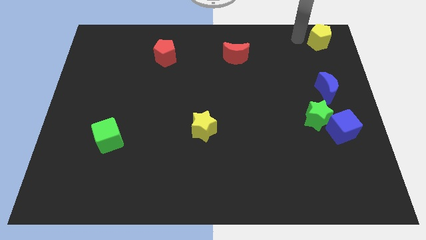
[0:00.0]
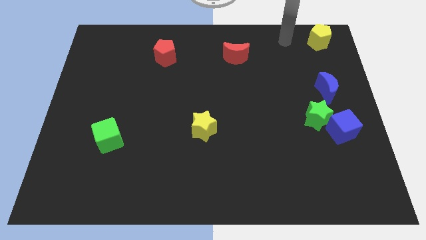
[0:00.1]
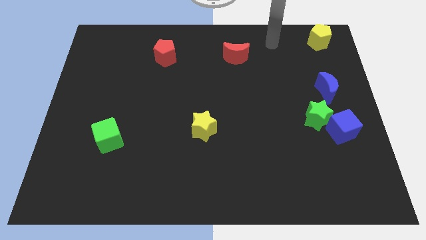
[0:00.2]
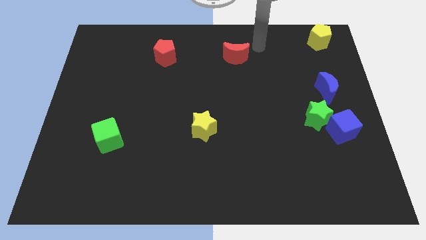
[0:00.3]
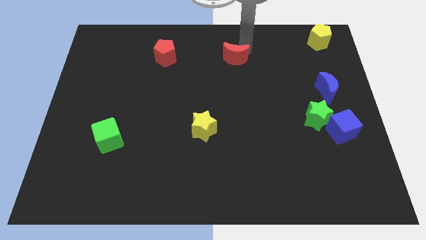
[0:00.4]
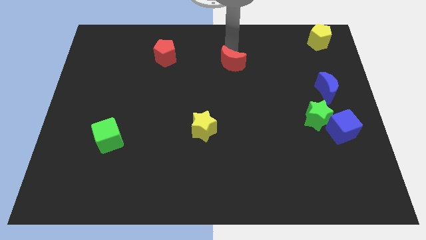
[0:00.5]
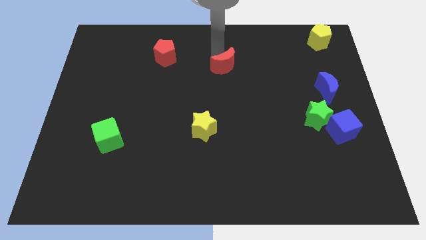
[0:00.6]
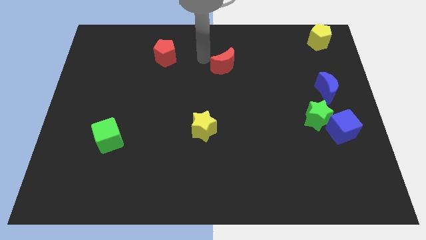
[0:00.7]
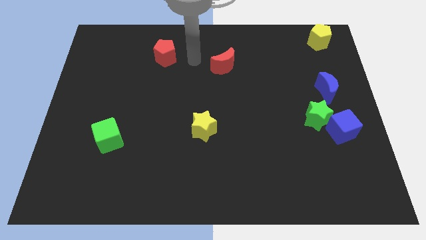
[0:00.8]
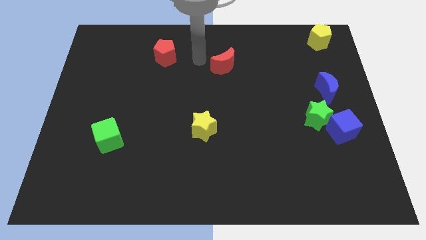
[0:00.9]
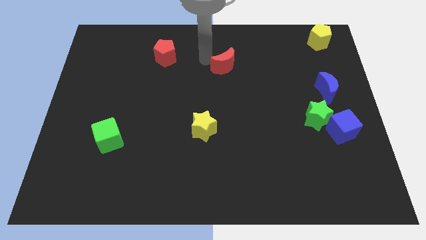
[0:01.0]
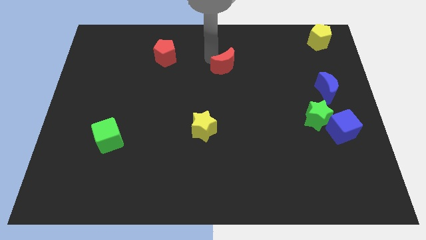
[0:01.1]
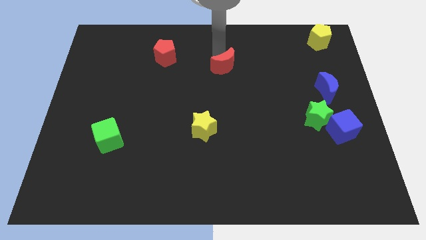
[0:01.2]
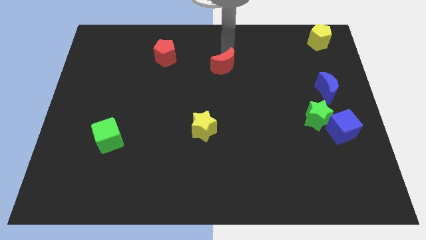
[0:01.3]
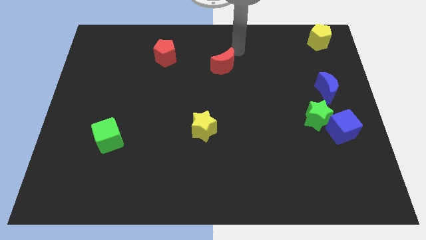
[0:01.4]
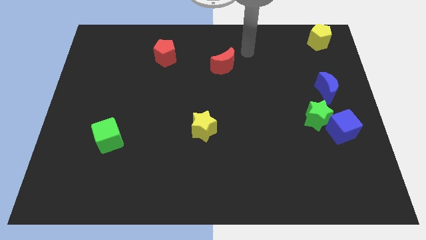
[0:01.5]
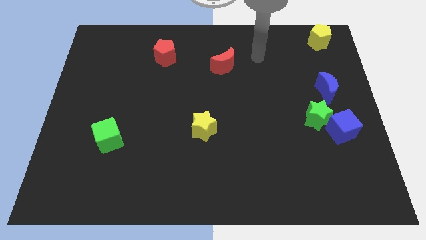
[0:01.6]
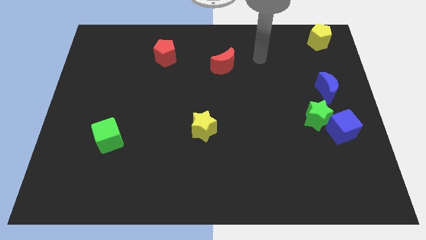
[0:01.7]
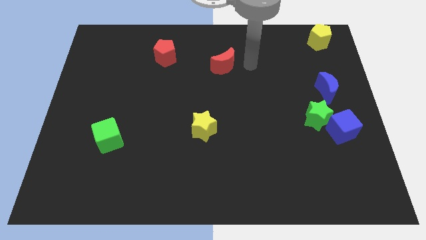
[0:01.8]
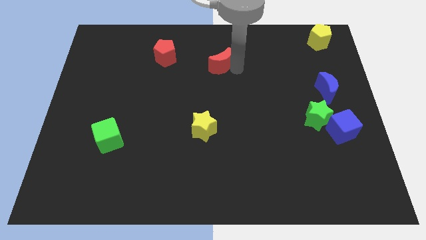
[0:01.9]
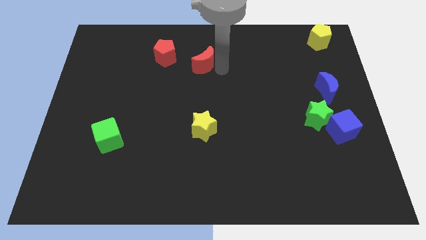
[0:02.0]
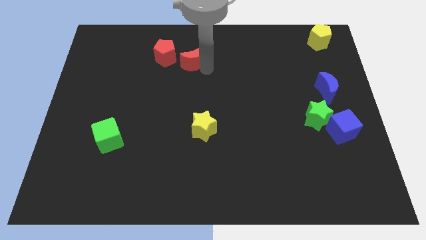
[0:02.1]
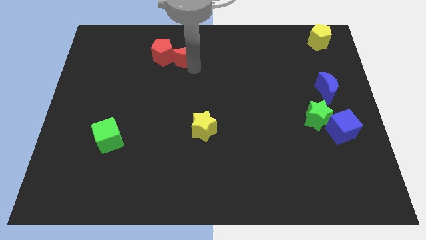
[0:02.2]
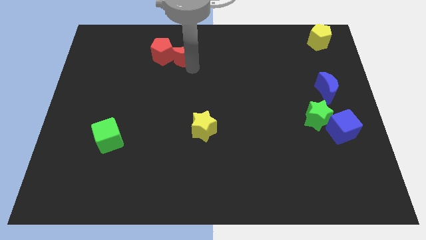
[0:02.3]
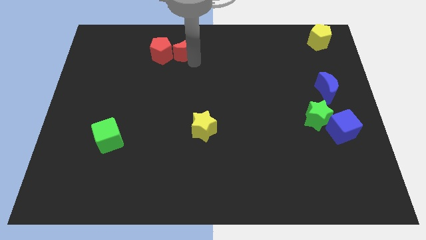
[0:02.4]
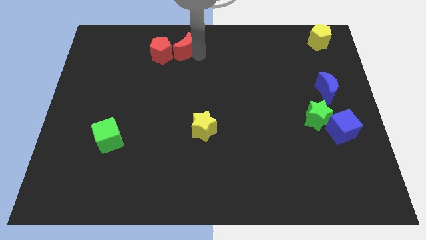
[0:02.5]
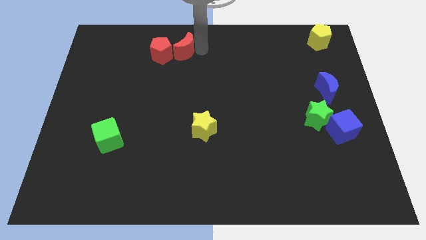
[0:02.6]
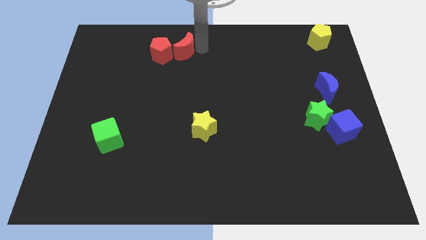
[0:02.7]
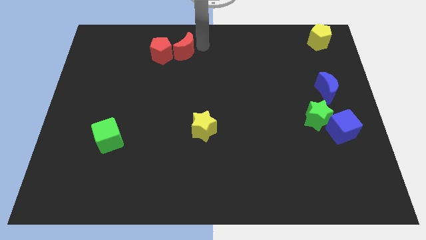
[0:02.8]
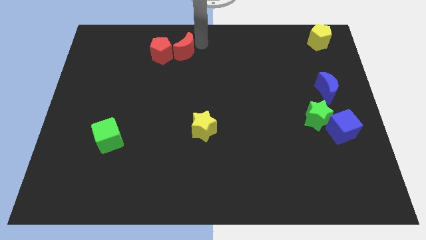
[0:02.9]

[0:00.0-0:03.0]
move the red crescent to the right of the red pentagon

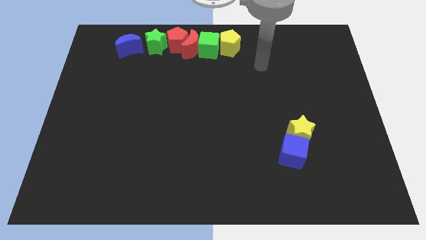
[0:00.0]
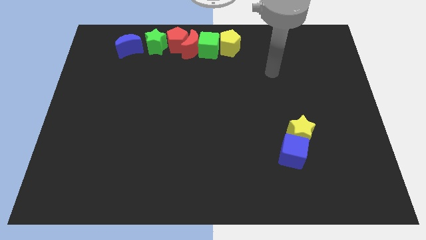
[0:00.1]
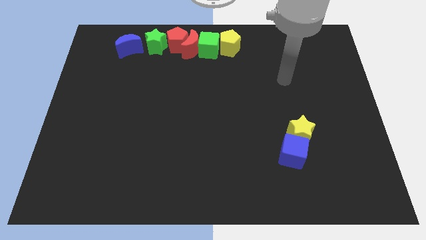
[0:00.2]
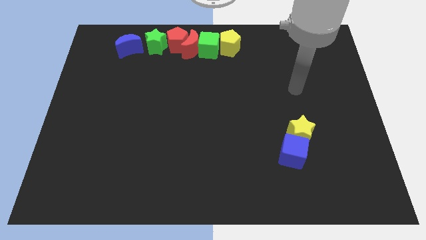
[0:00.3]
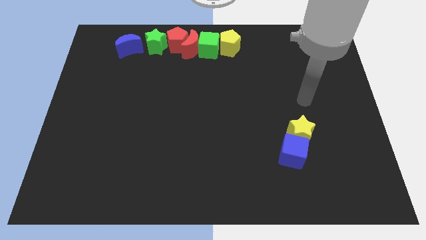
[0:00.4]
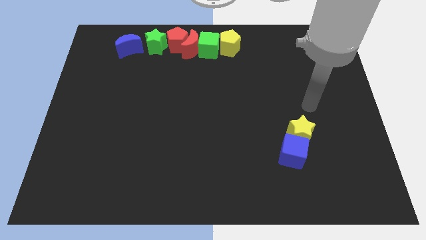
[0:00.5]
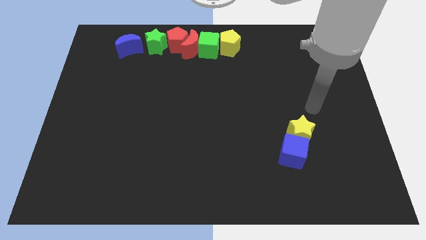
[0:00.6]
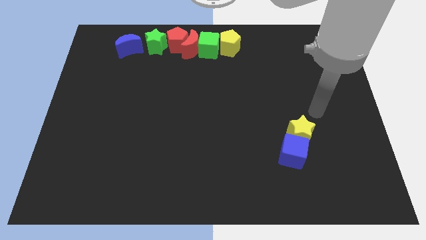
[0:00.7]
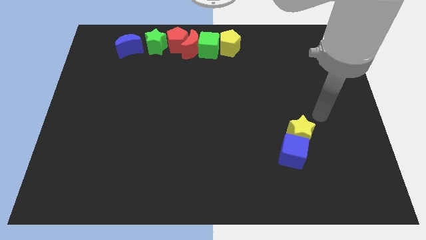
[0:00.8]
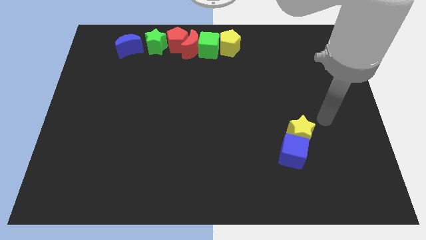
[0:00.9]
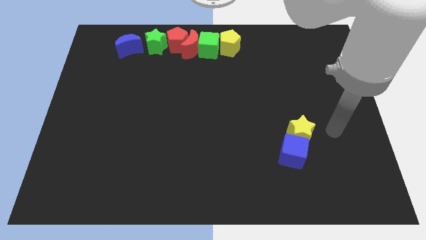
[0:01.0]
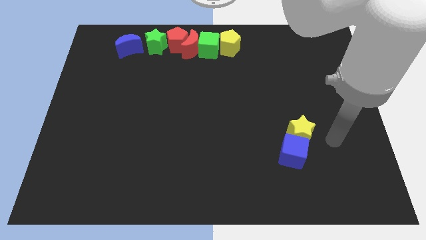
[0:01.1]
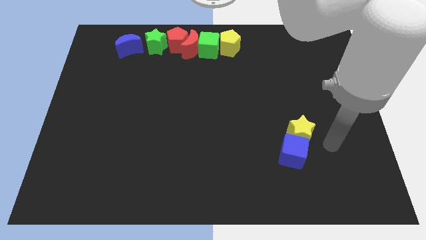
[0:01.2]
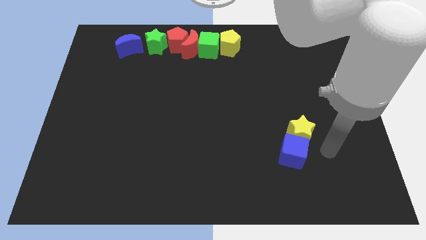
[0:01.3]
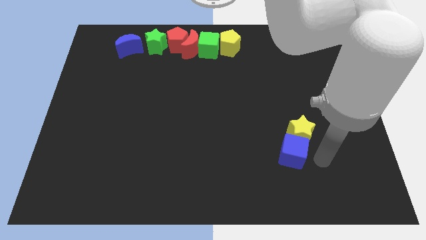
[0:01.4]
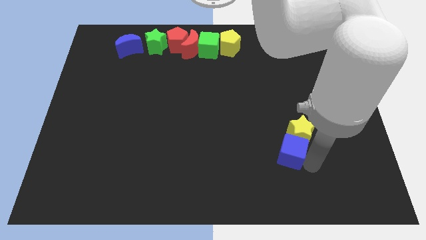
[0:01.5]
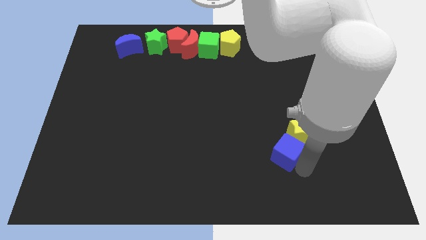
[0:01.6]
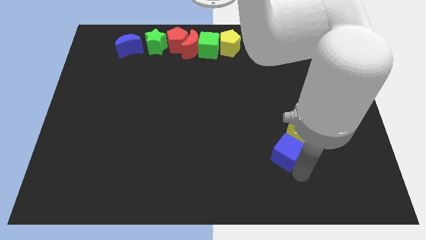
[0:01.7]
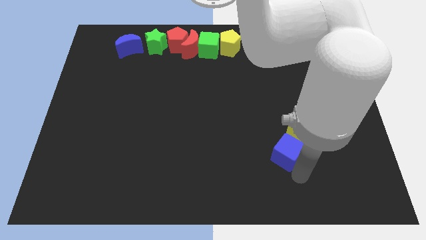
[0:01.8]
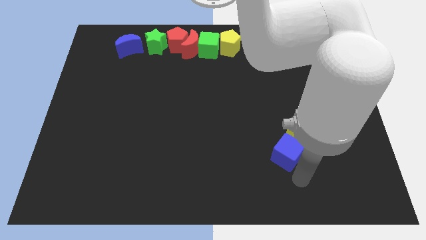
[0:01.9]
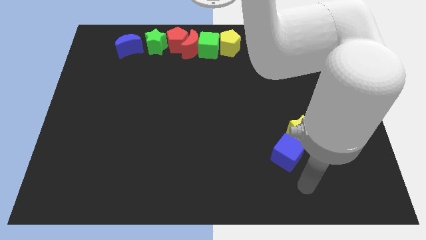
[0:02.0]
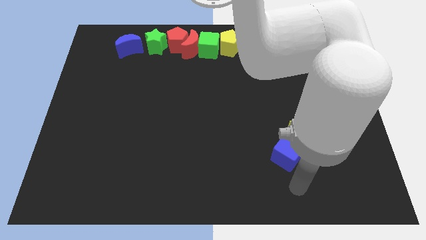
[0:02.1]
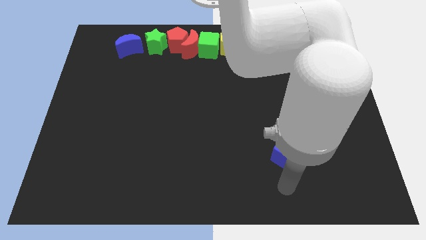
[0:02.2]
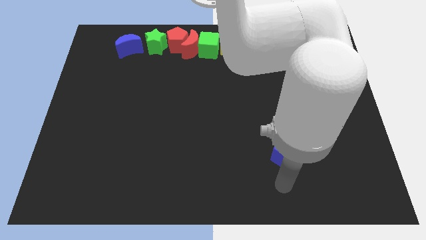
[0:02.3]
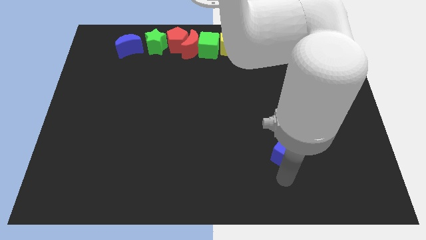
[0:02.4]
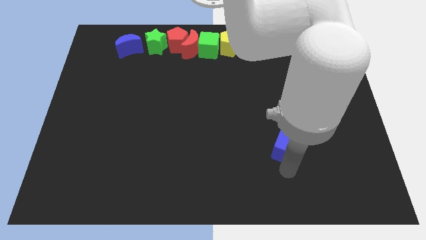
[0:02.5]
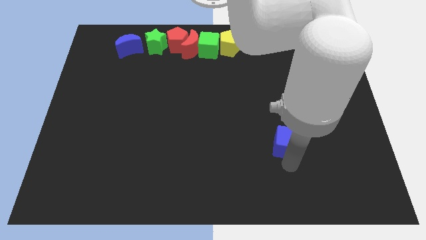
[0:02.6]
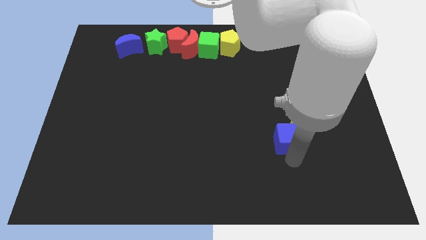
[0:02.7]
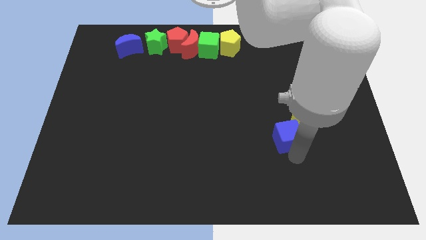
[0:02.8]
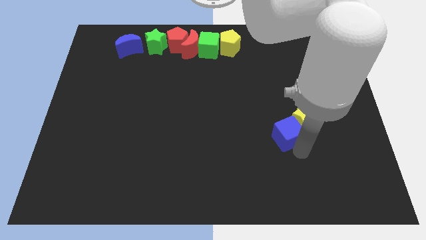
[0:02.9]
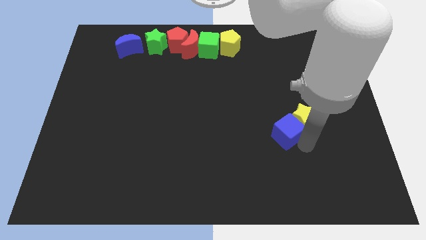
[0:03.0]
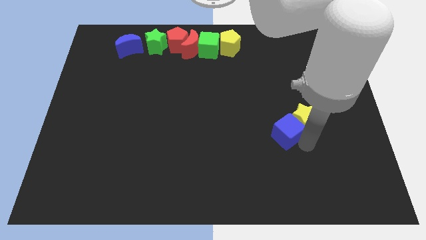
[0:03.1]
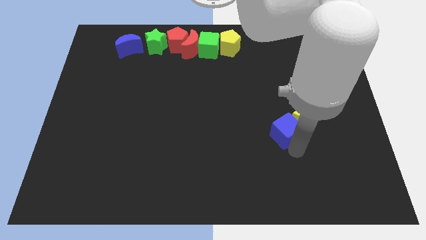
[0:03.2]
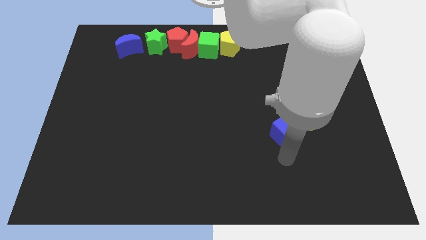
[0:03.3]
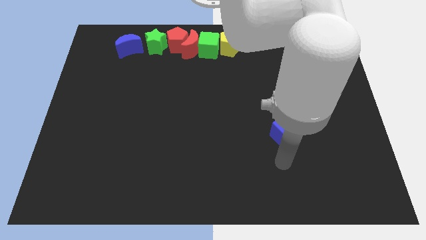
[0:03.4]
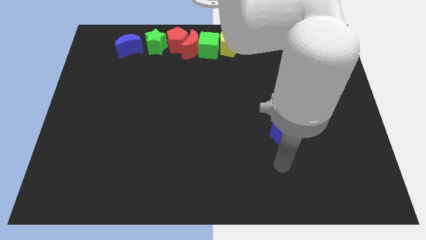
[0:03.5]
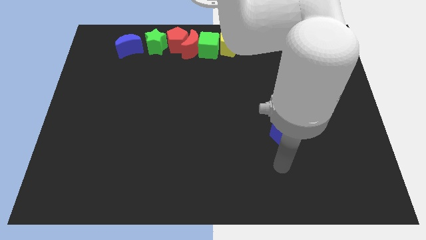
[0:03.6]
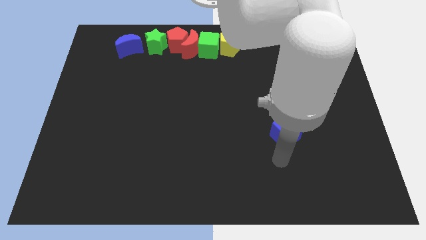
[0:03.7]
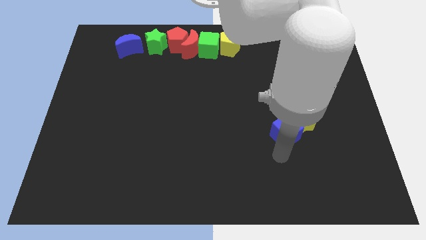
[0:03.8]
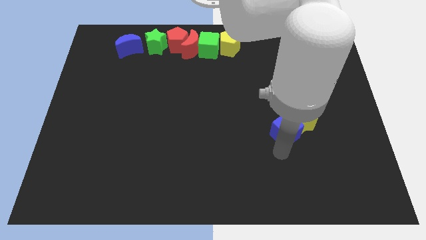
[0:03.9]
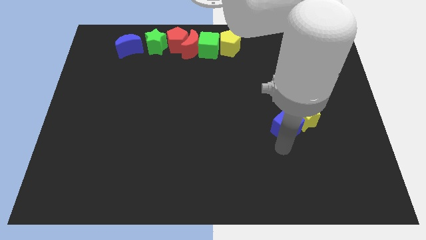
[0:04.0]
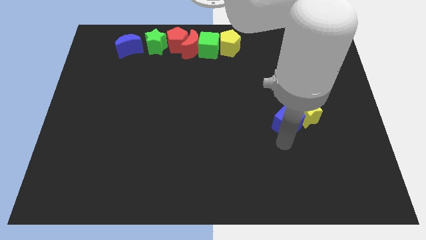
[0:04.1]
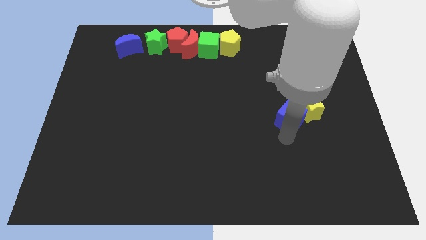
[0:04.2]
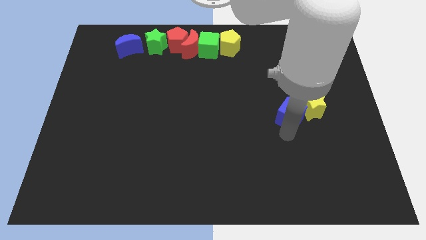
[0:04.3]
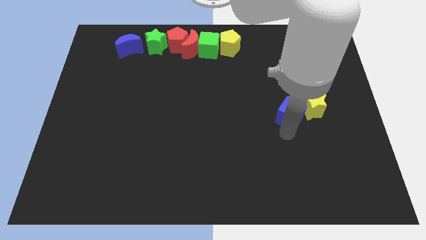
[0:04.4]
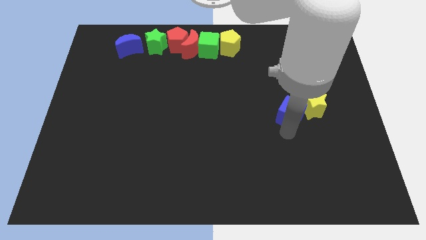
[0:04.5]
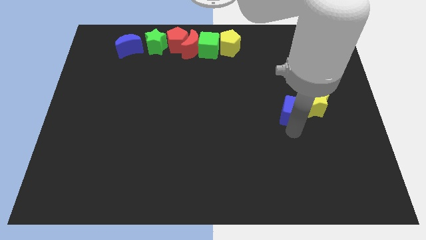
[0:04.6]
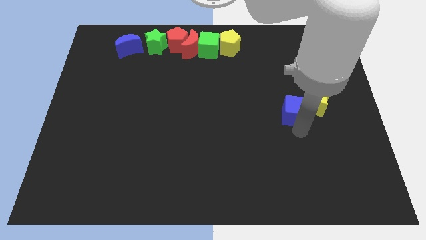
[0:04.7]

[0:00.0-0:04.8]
move the blue cube and yellow star upward

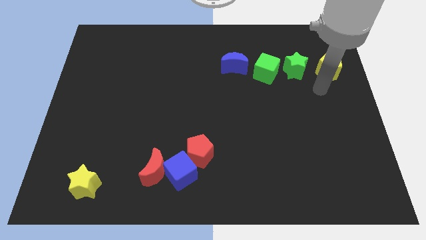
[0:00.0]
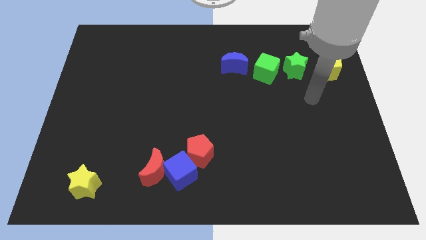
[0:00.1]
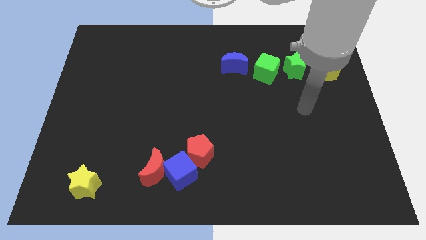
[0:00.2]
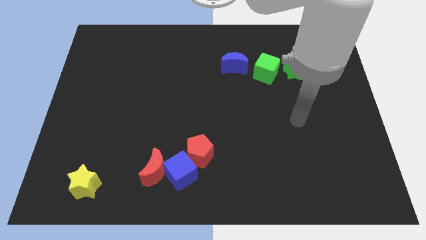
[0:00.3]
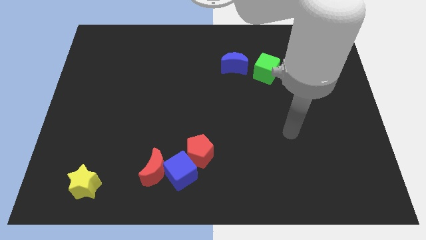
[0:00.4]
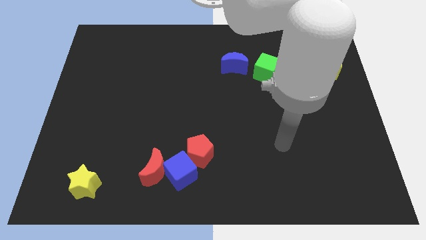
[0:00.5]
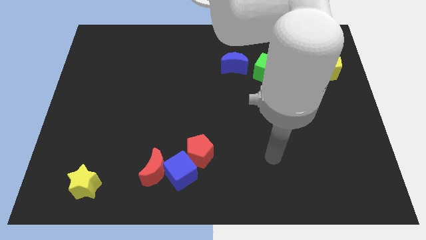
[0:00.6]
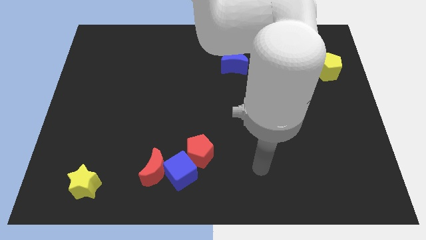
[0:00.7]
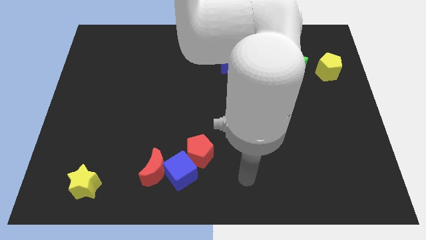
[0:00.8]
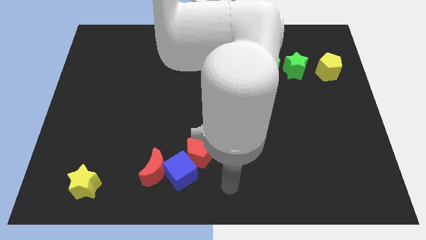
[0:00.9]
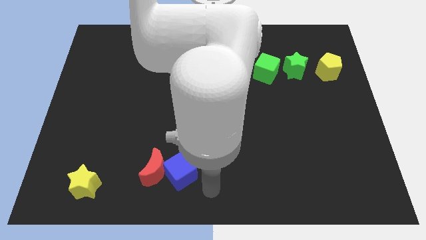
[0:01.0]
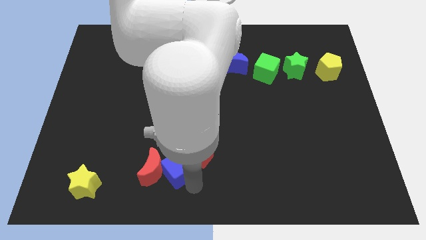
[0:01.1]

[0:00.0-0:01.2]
move your arm to the bottom of the blue cube

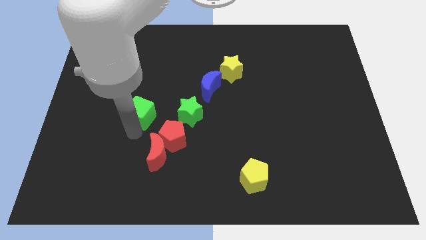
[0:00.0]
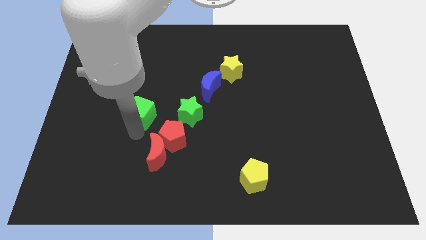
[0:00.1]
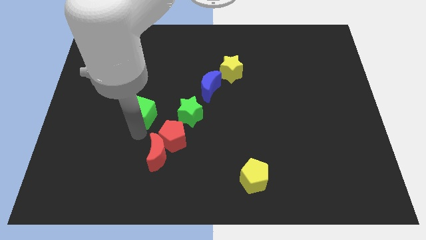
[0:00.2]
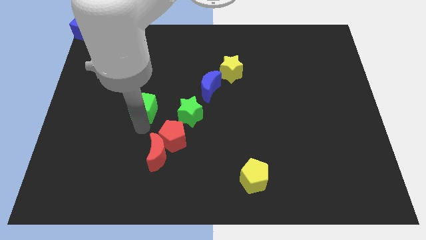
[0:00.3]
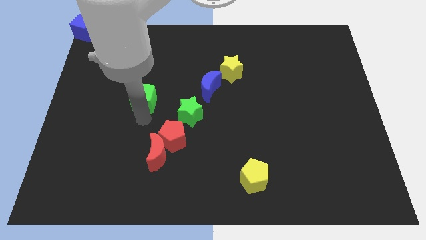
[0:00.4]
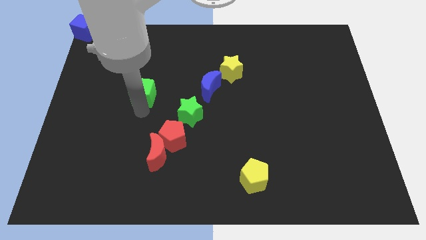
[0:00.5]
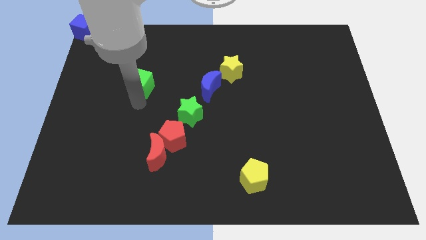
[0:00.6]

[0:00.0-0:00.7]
move green cube slightly upwards
